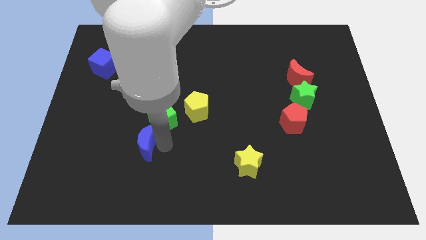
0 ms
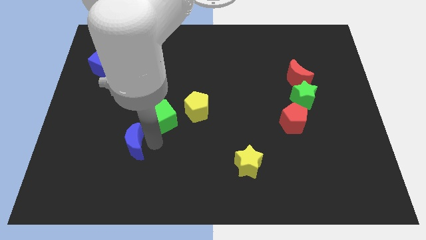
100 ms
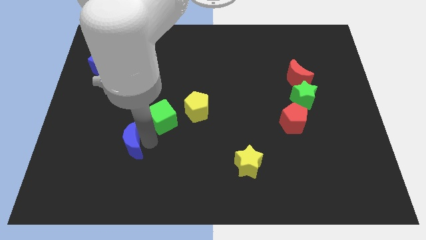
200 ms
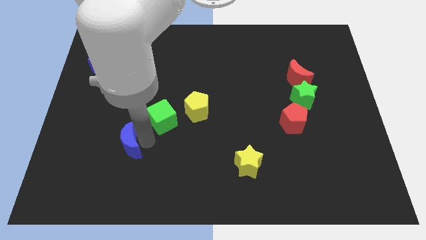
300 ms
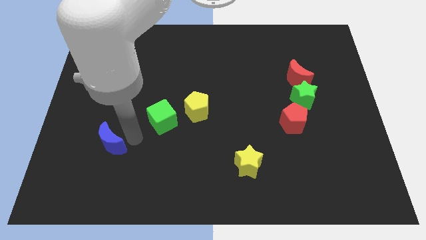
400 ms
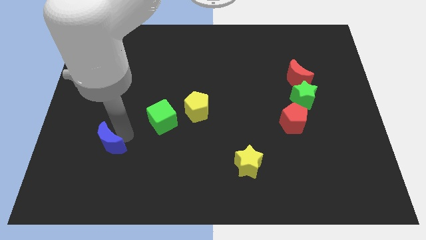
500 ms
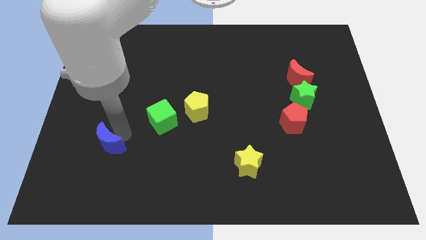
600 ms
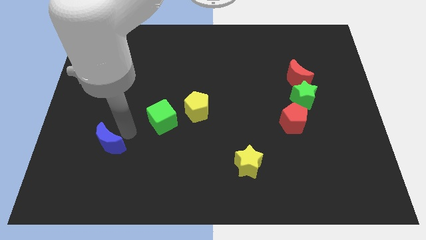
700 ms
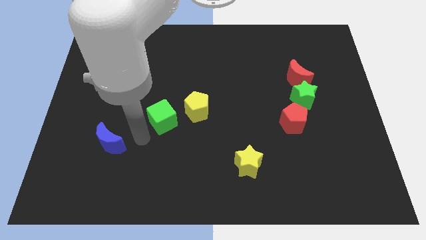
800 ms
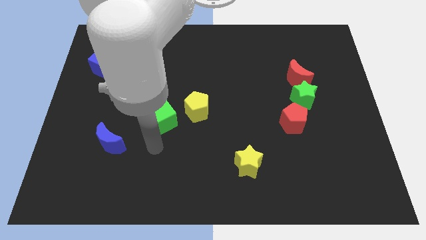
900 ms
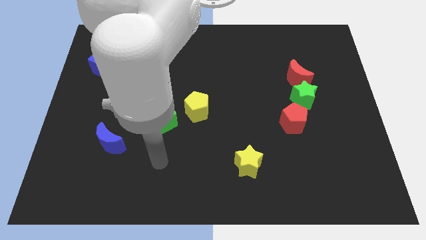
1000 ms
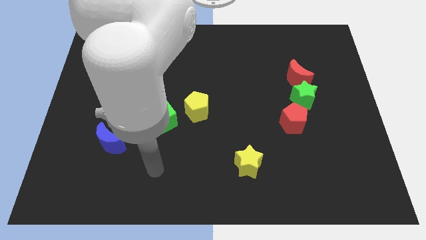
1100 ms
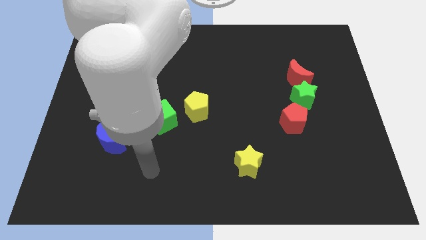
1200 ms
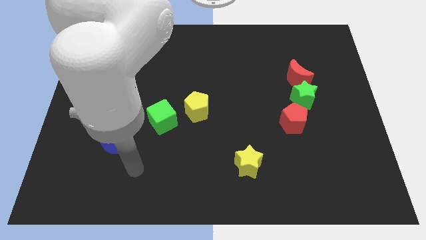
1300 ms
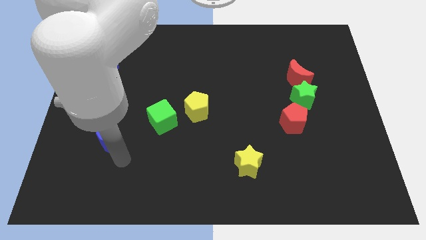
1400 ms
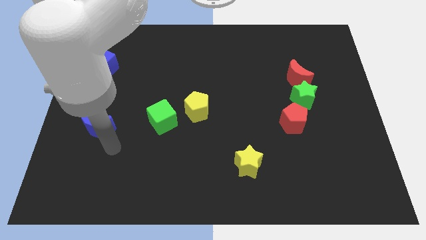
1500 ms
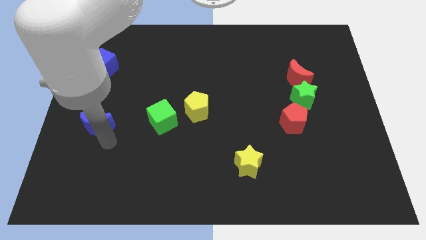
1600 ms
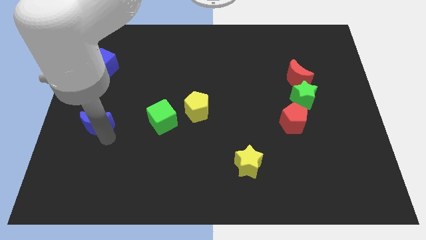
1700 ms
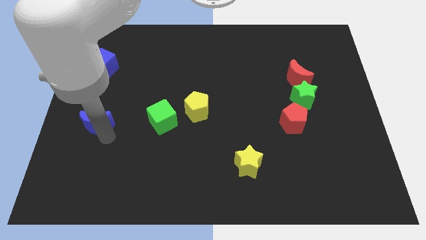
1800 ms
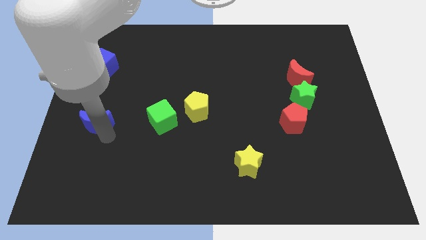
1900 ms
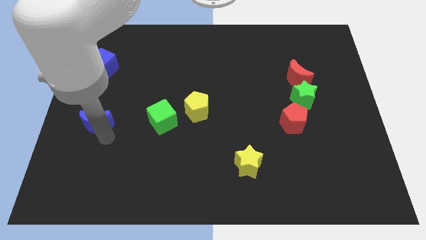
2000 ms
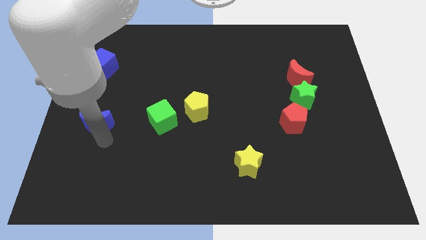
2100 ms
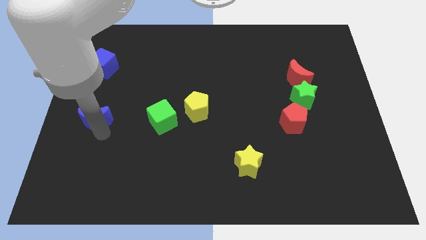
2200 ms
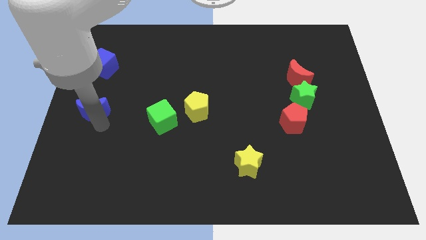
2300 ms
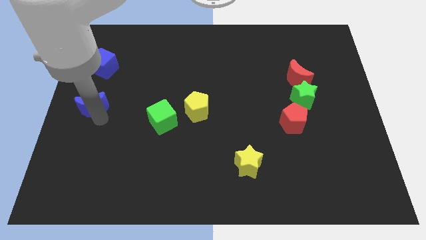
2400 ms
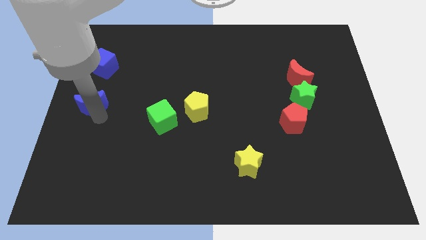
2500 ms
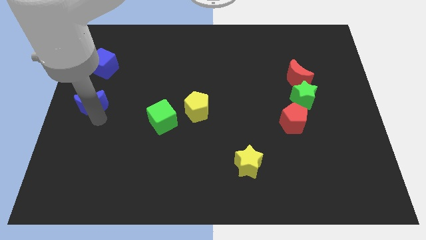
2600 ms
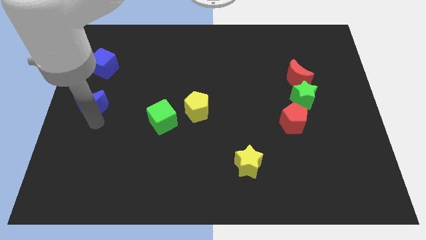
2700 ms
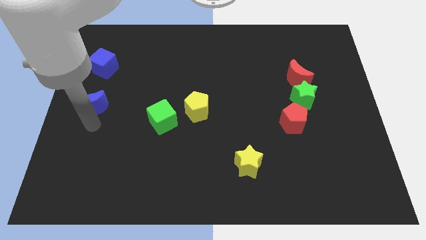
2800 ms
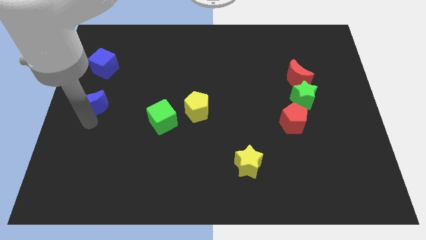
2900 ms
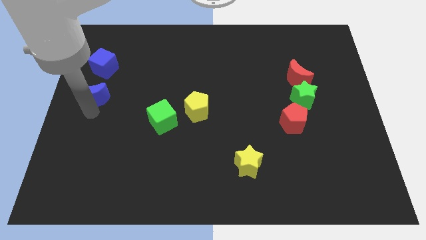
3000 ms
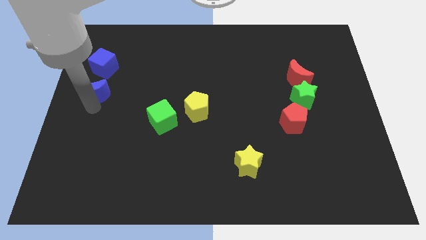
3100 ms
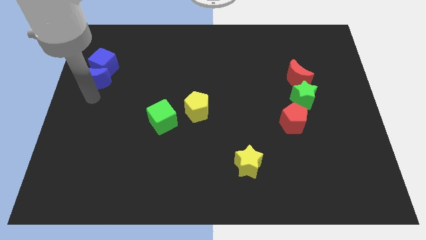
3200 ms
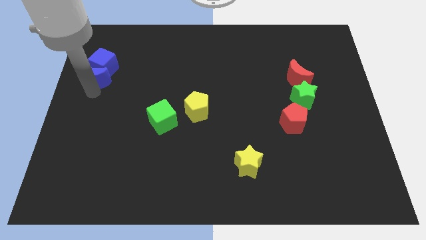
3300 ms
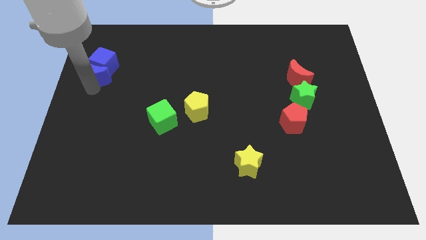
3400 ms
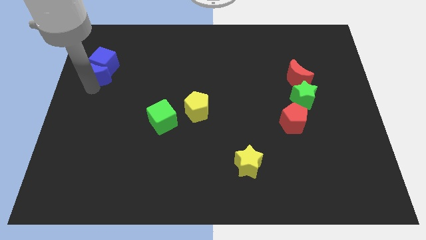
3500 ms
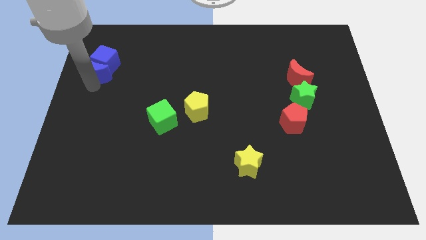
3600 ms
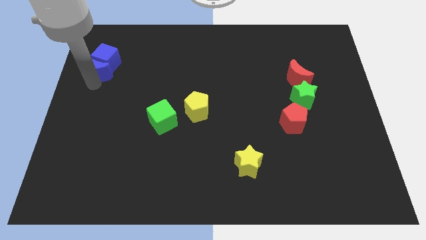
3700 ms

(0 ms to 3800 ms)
push the blue crescent close to the bottom of blue cube

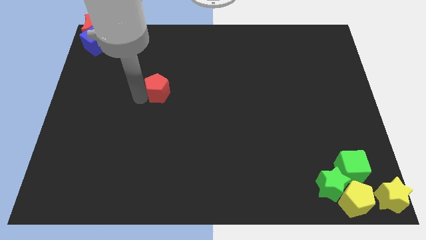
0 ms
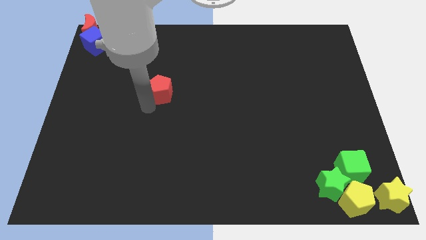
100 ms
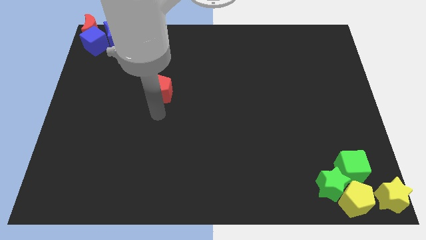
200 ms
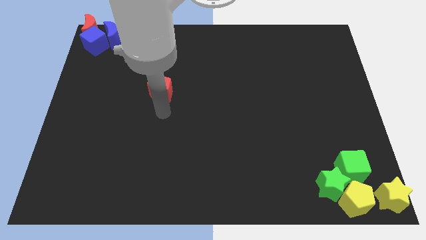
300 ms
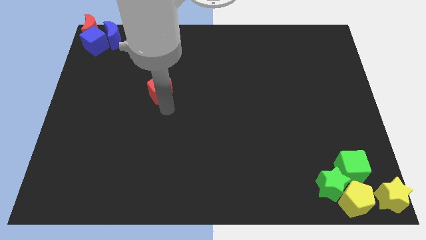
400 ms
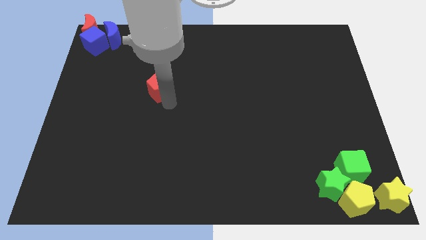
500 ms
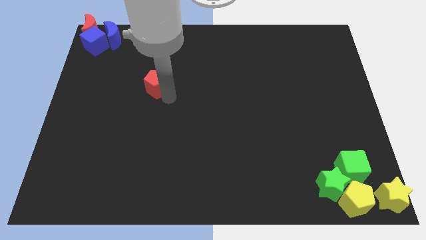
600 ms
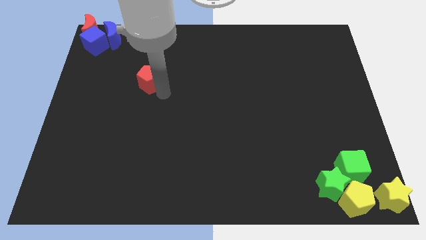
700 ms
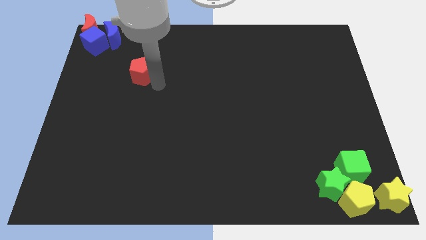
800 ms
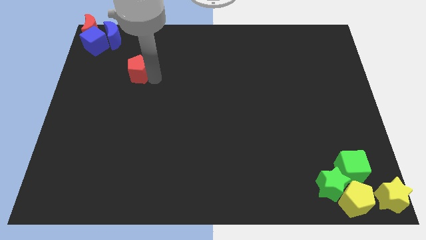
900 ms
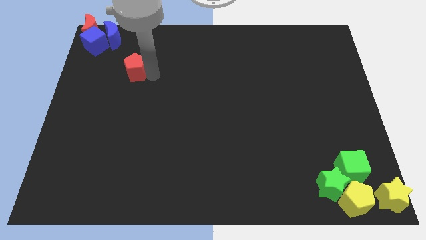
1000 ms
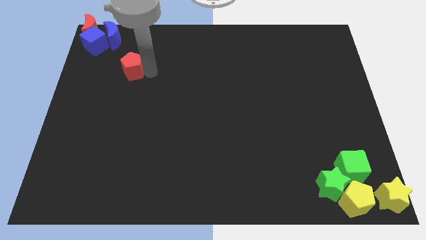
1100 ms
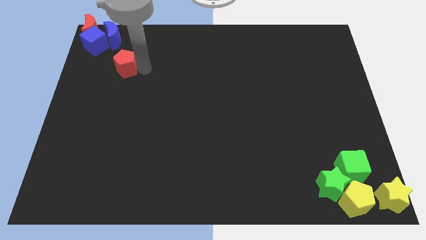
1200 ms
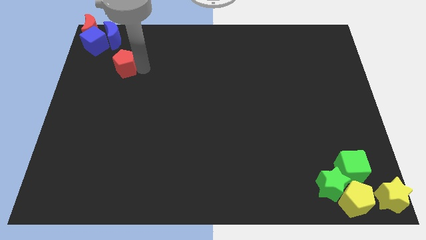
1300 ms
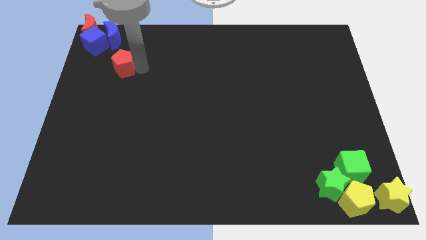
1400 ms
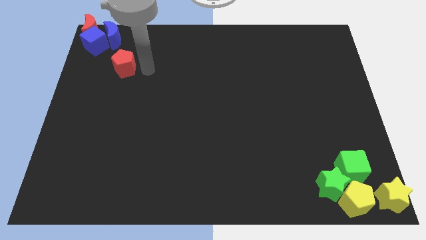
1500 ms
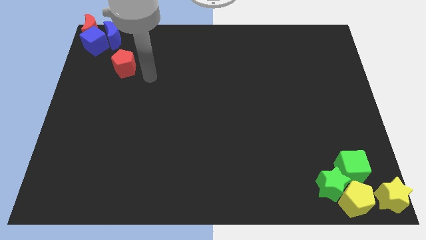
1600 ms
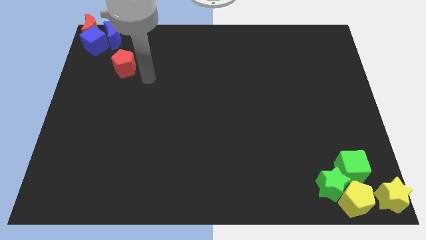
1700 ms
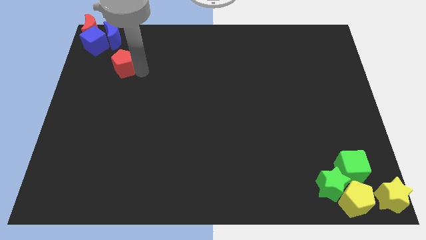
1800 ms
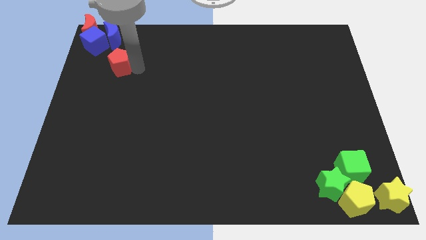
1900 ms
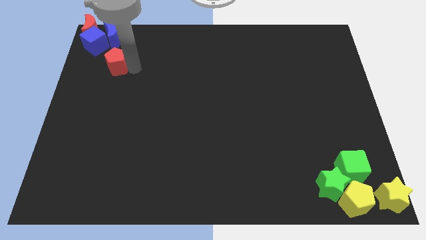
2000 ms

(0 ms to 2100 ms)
slide the red pentagon towards the top left corner of the board

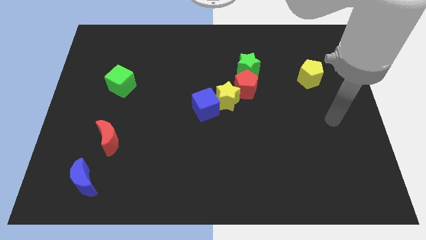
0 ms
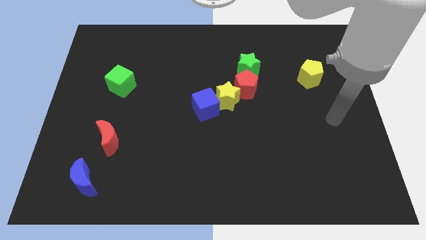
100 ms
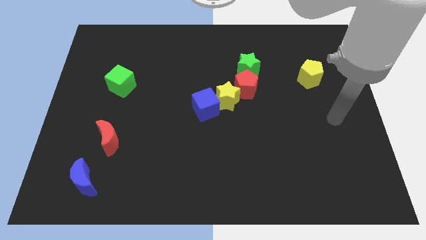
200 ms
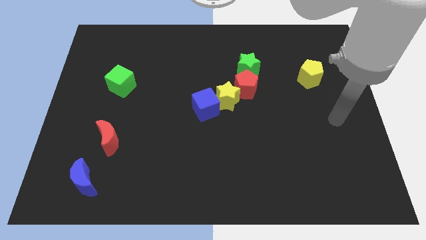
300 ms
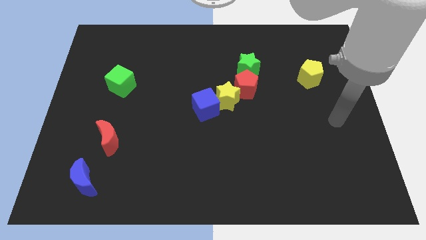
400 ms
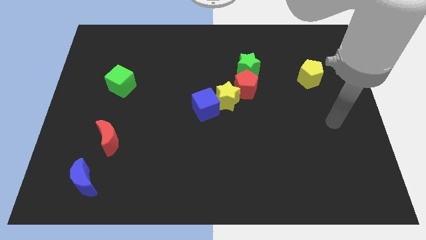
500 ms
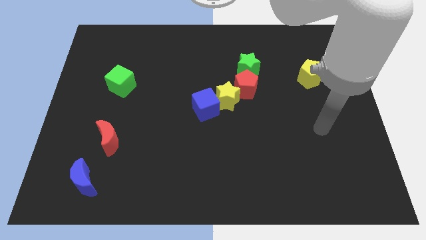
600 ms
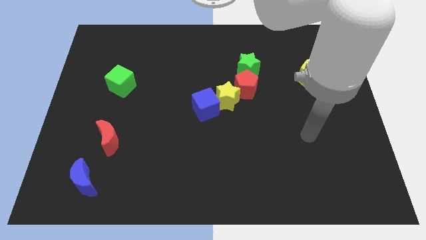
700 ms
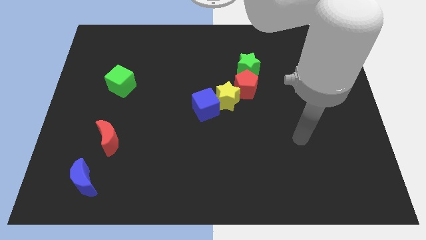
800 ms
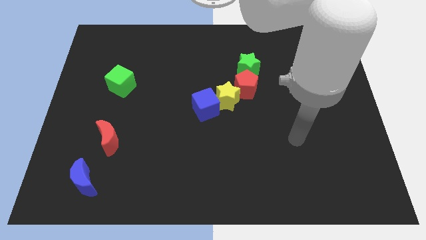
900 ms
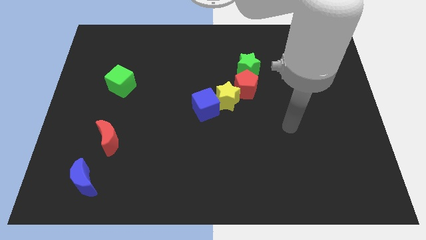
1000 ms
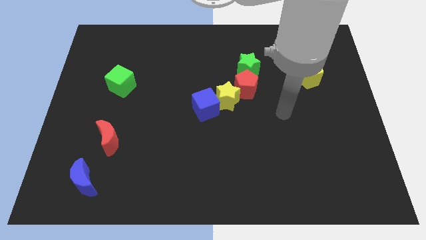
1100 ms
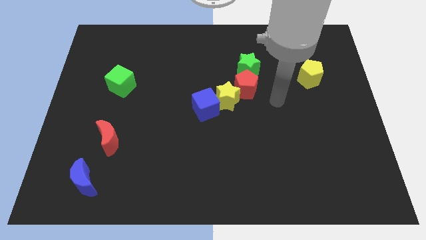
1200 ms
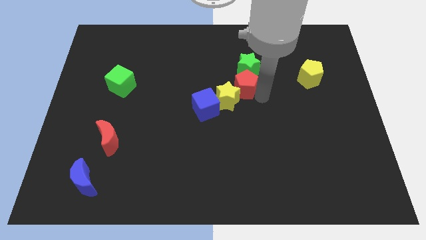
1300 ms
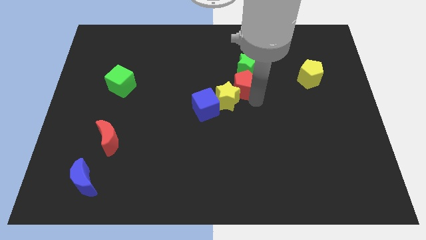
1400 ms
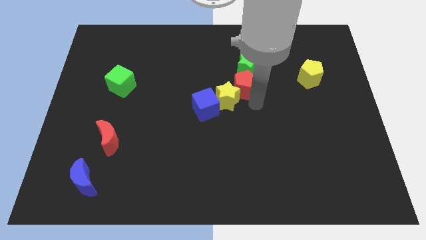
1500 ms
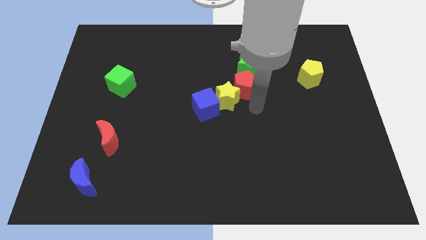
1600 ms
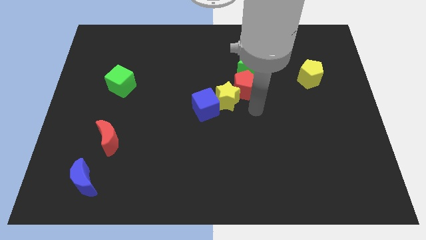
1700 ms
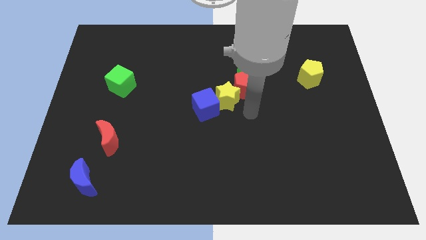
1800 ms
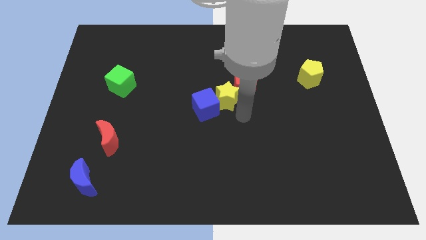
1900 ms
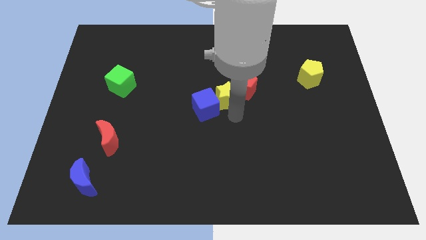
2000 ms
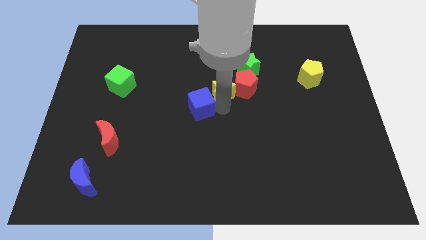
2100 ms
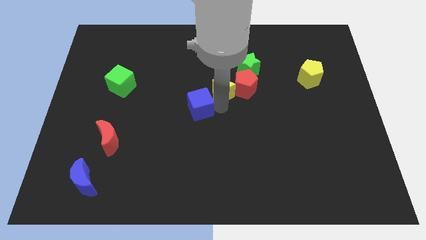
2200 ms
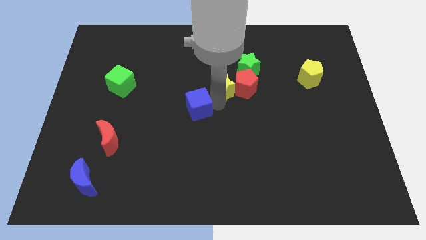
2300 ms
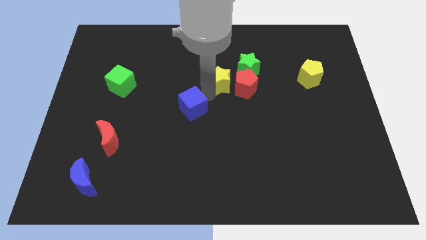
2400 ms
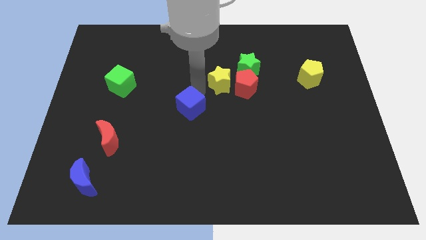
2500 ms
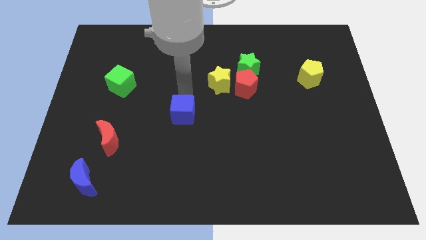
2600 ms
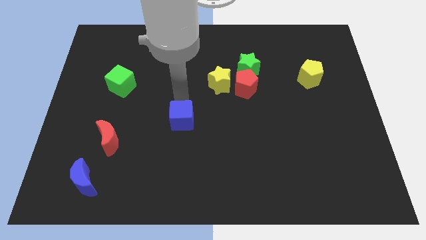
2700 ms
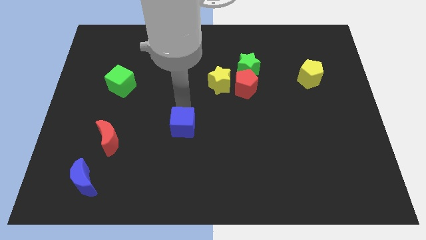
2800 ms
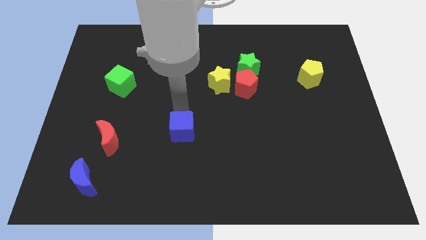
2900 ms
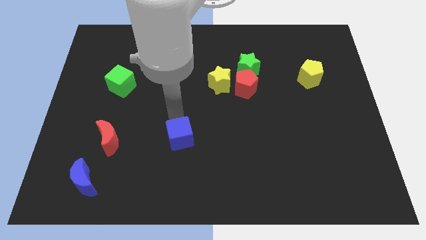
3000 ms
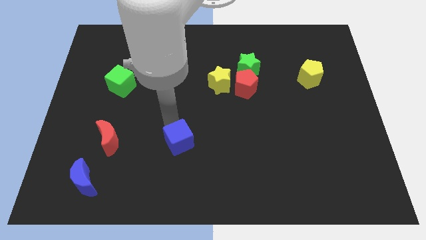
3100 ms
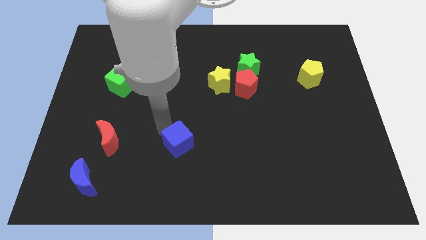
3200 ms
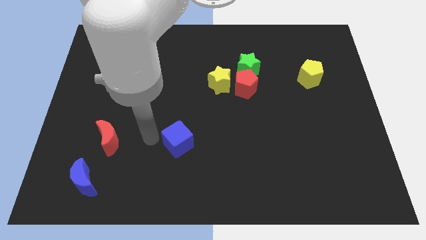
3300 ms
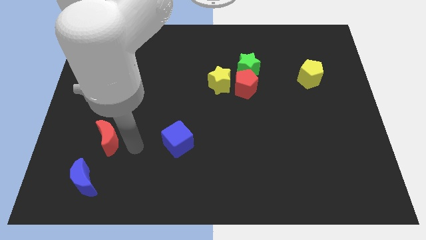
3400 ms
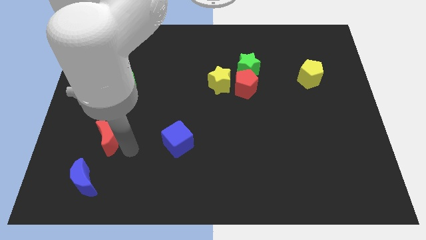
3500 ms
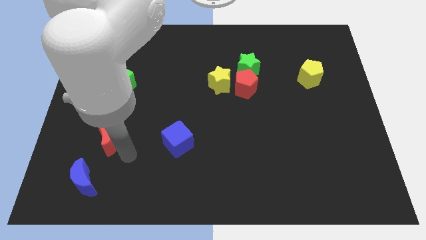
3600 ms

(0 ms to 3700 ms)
place the blue cube to the right of the red moon
